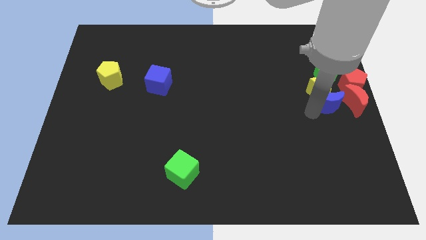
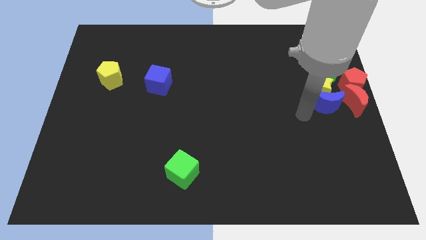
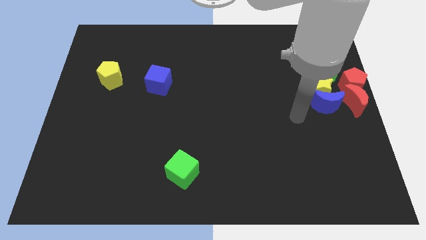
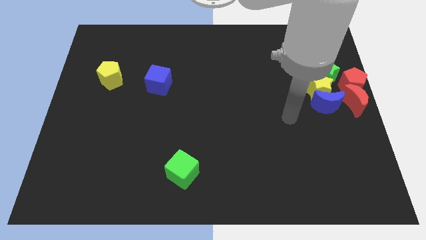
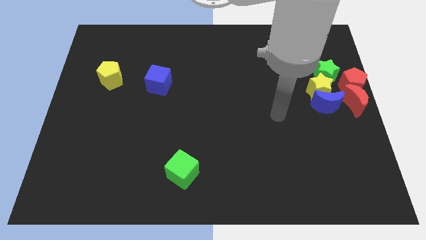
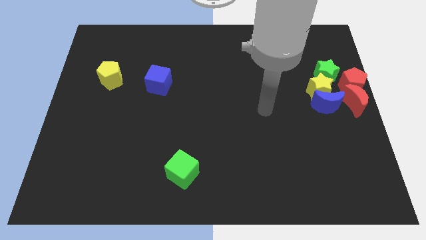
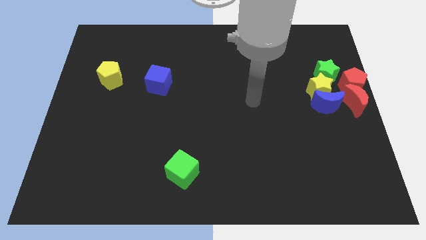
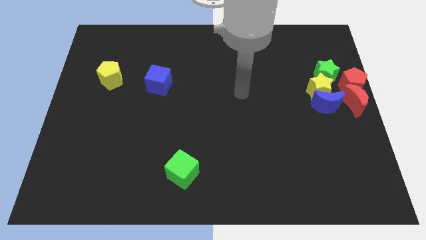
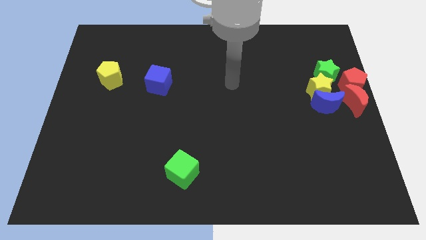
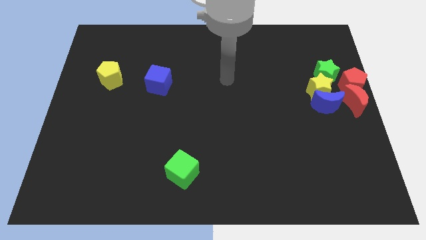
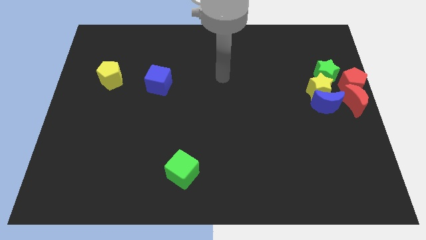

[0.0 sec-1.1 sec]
move your arm away from the blue moon

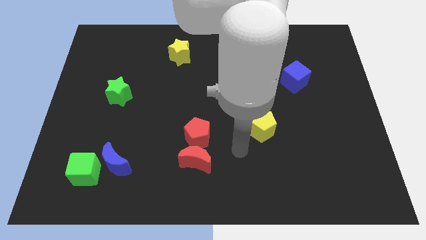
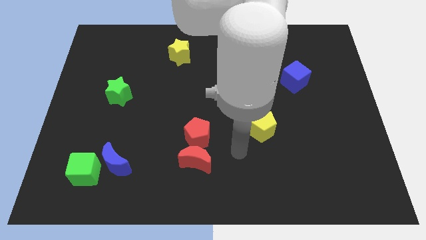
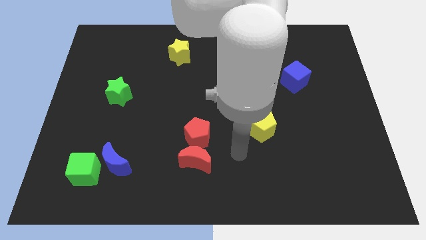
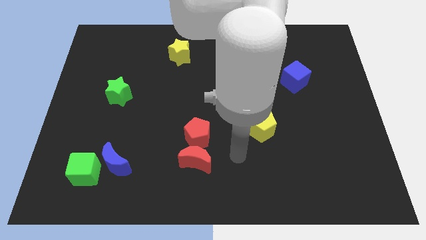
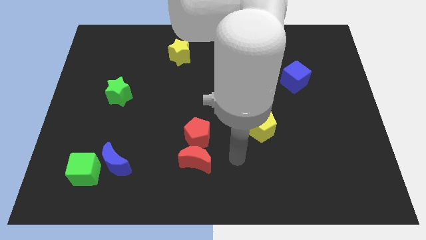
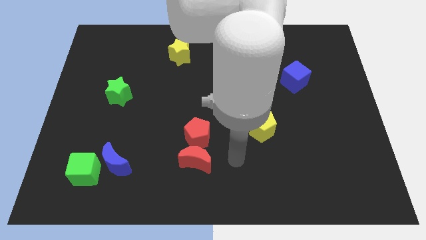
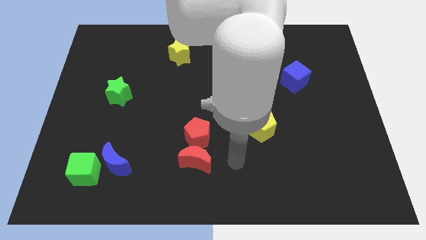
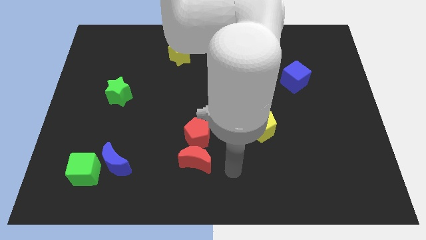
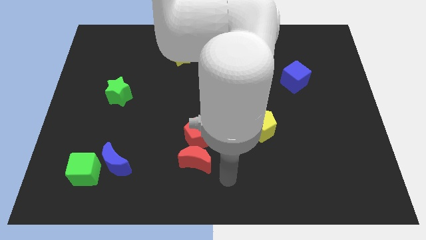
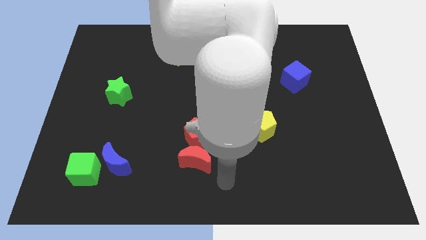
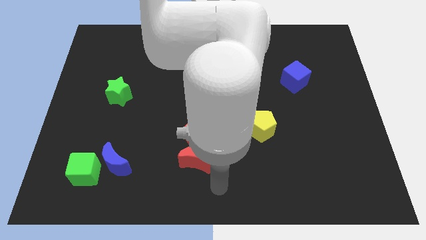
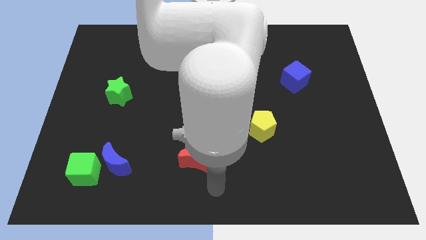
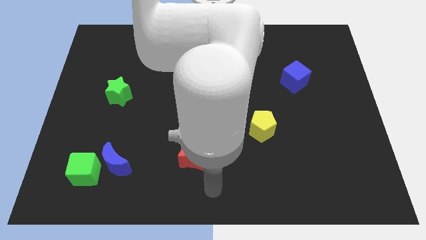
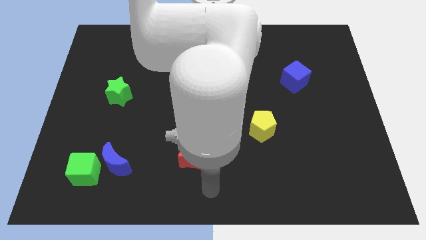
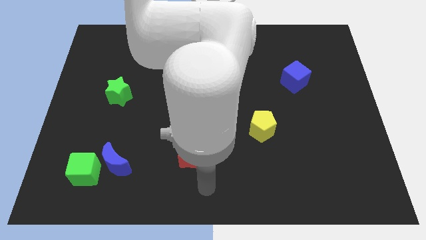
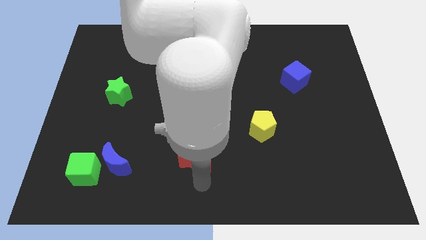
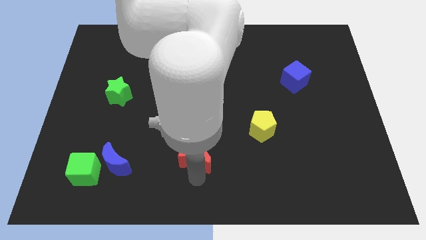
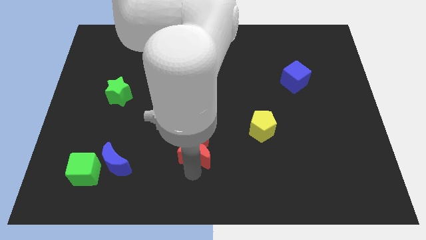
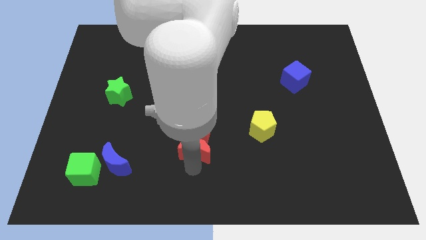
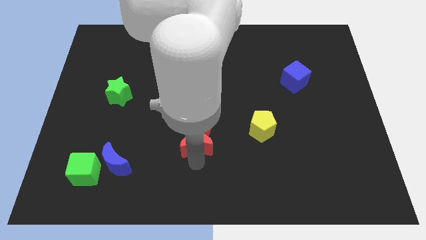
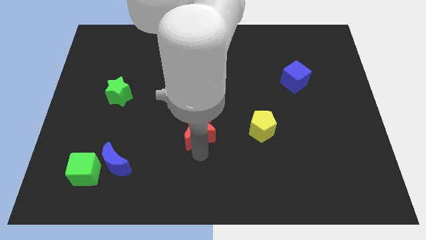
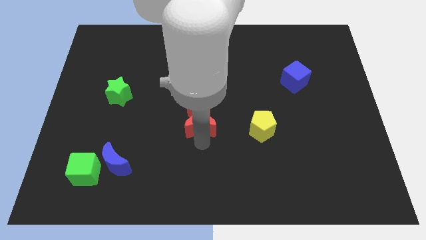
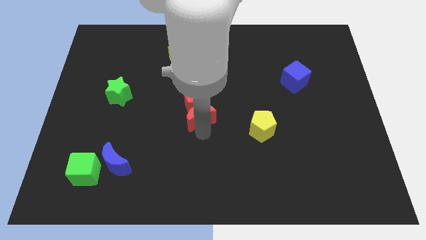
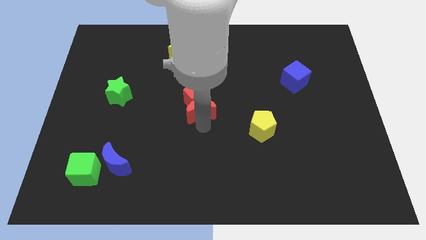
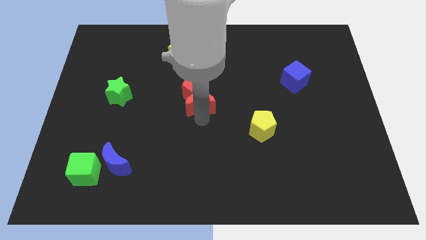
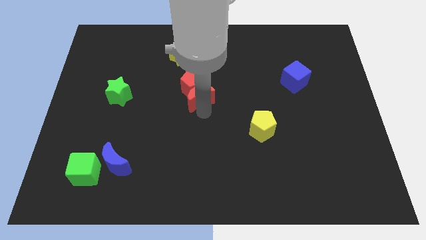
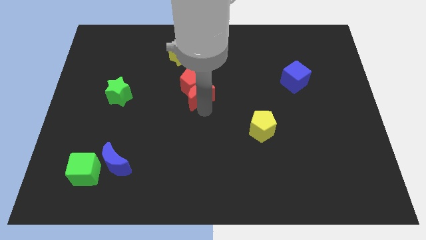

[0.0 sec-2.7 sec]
move the red moon along with red pentagon to the middle of the board

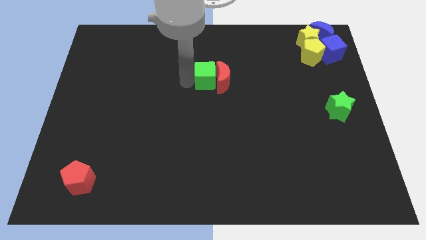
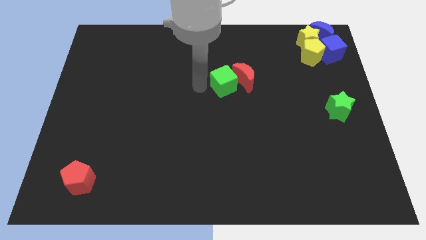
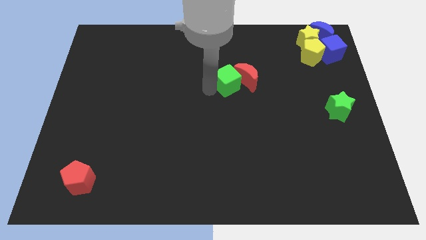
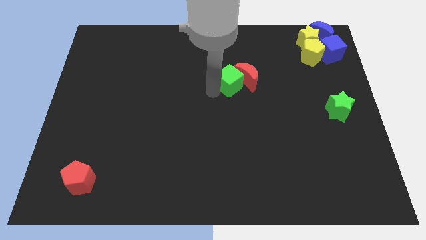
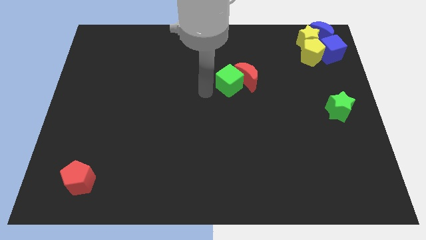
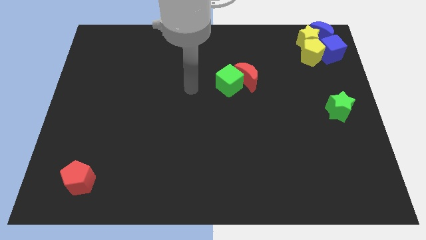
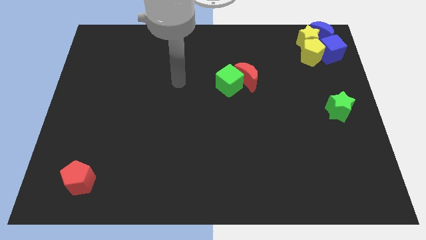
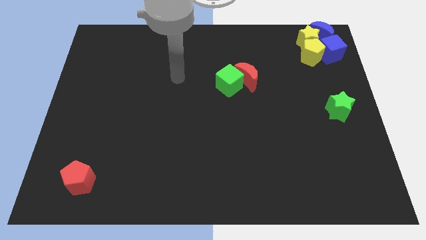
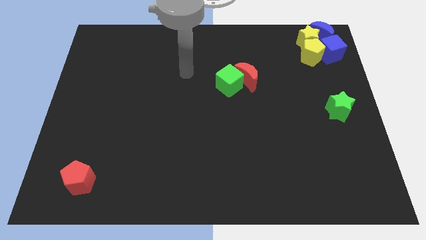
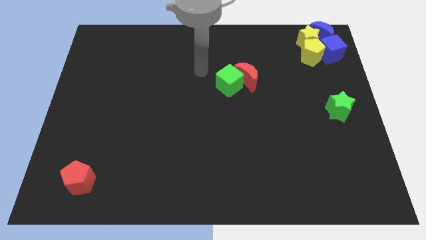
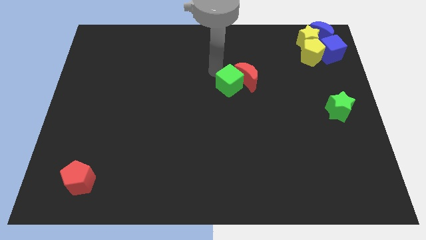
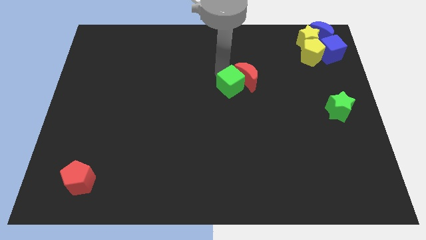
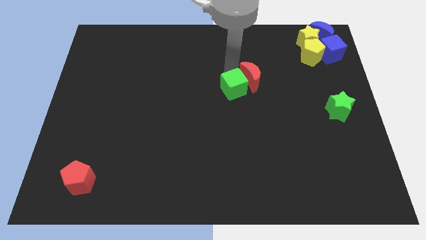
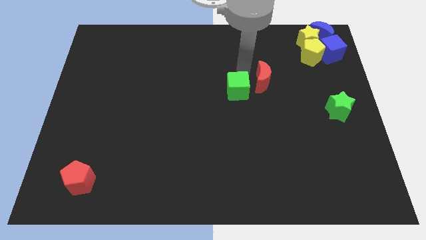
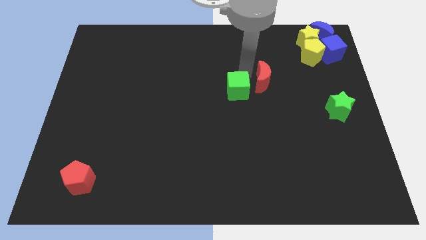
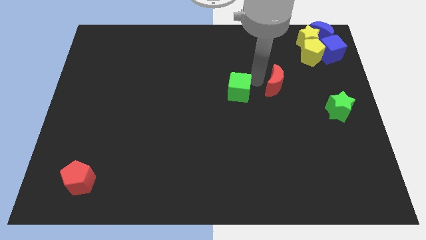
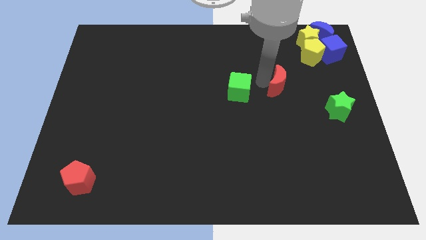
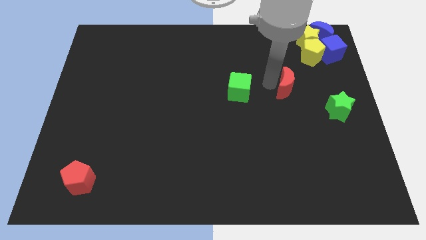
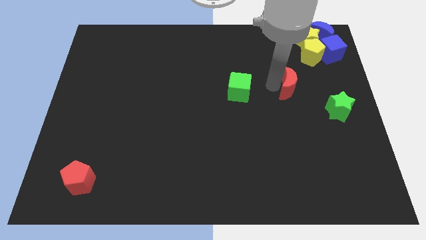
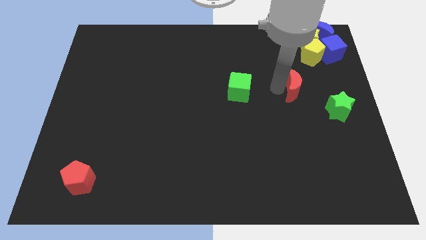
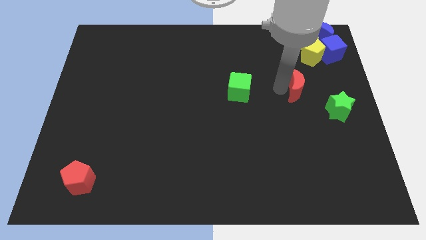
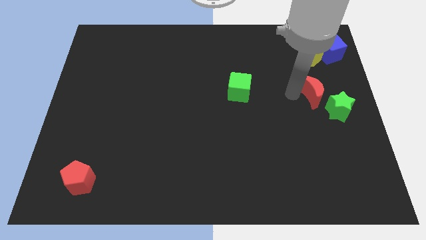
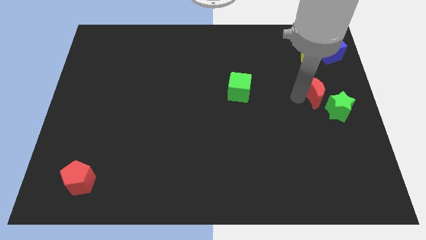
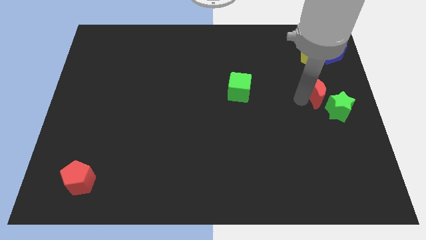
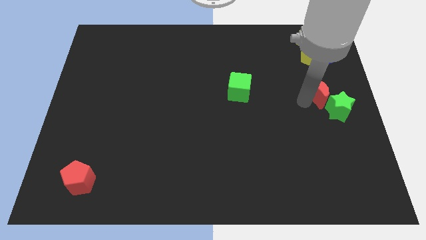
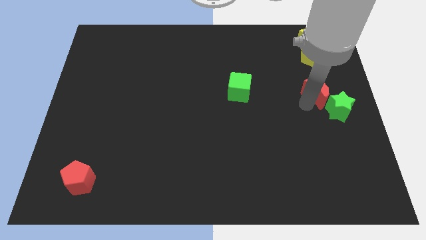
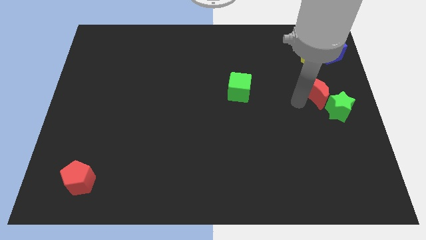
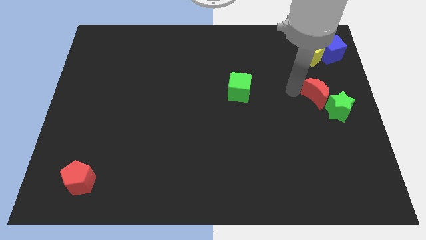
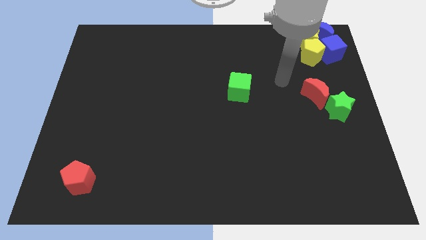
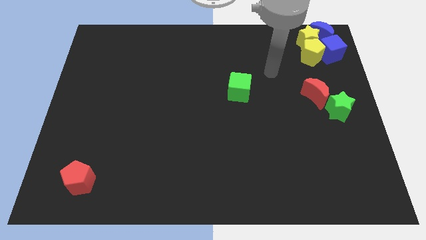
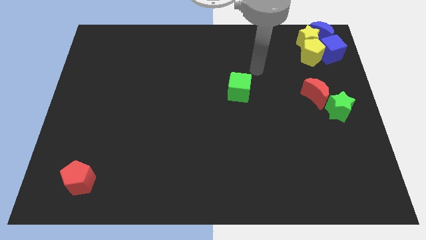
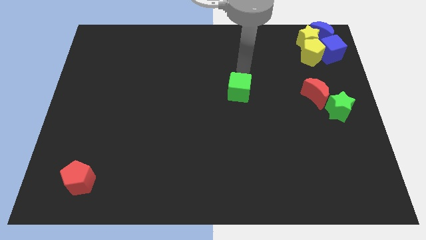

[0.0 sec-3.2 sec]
place the red crescent at the left side of the green star

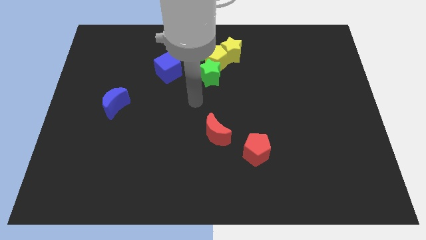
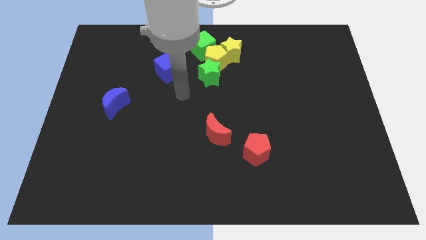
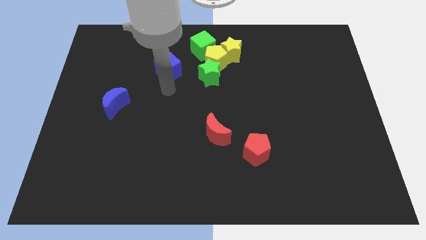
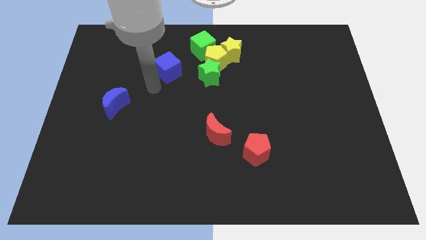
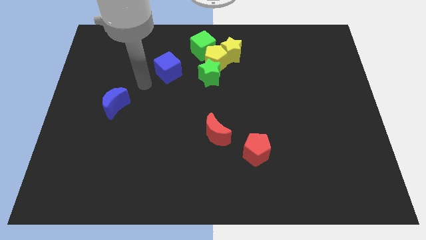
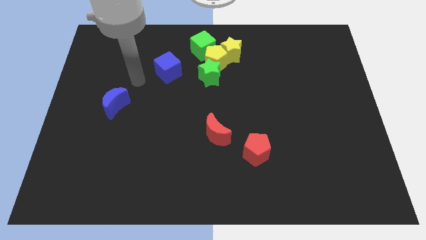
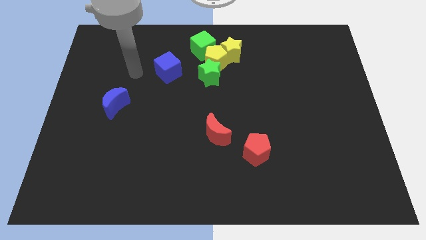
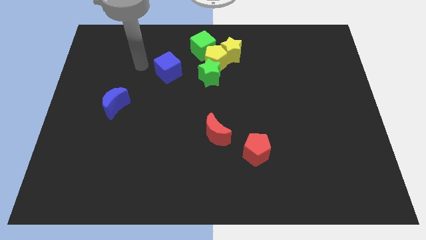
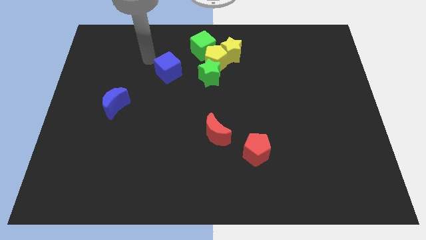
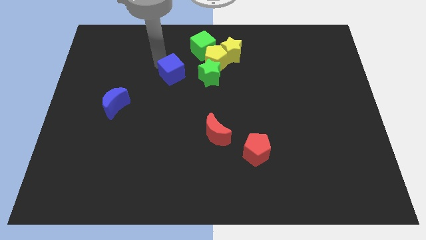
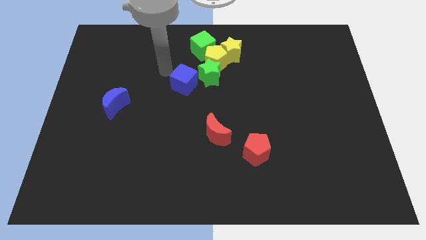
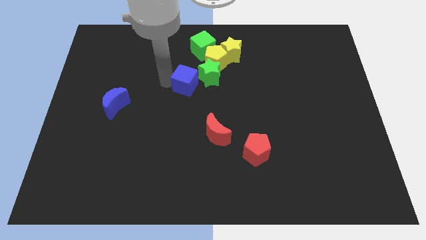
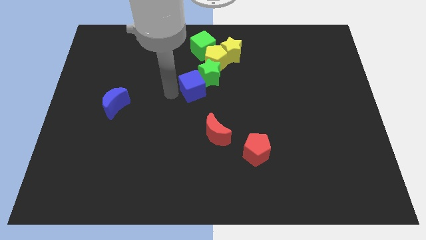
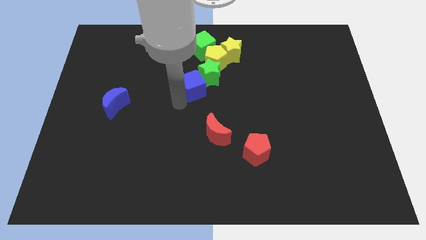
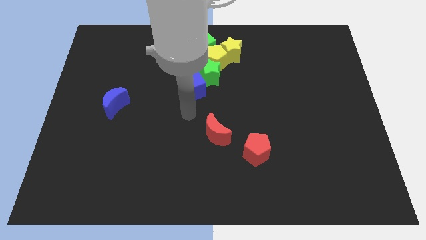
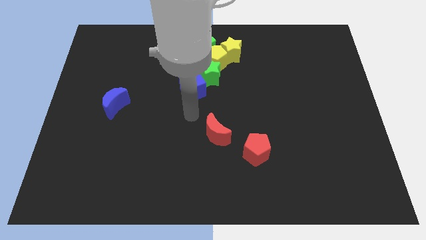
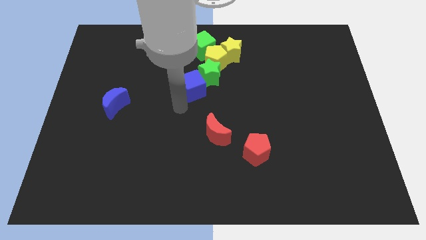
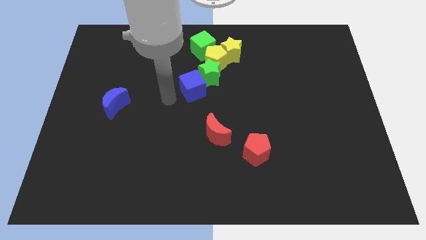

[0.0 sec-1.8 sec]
push the blue cube diagonal below green star

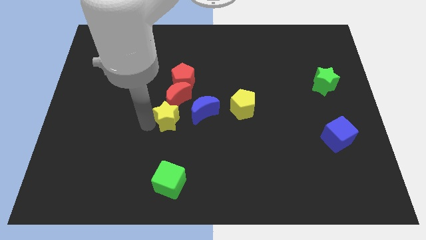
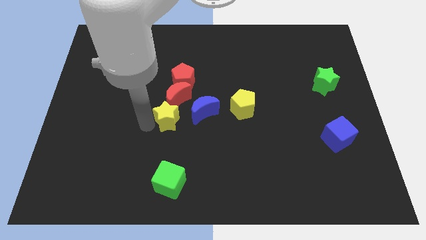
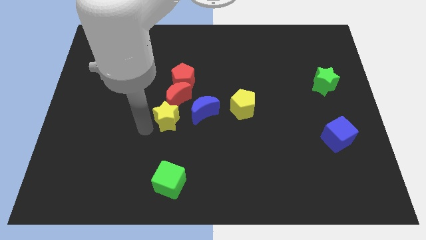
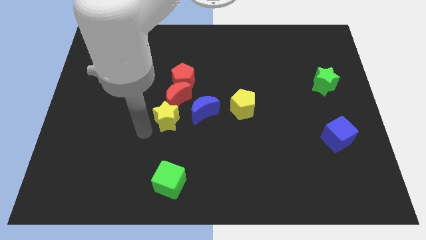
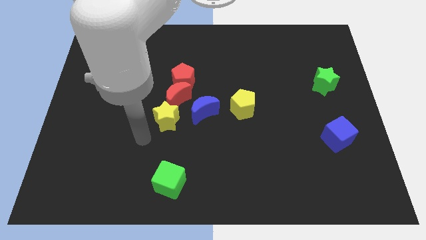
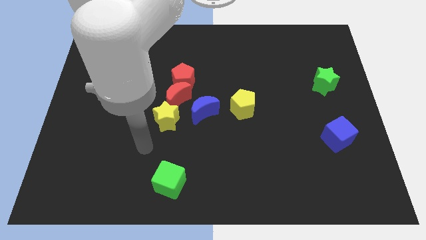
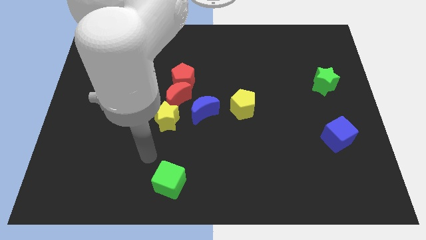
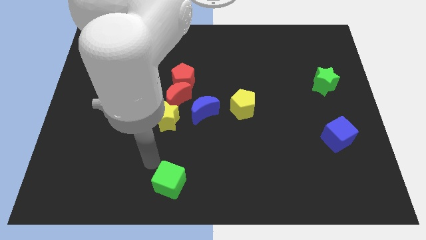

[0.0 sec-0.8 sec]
place your arm to the top of the green cube
